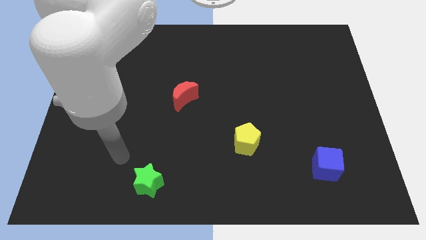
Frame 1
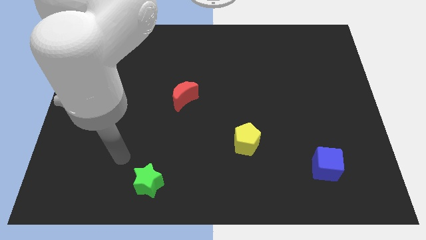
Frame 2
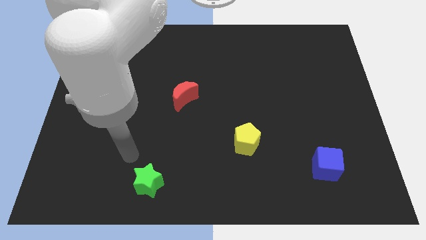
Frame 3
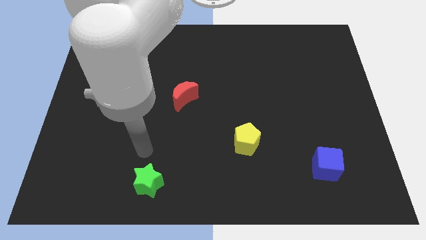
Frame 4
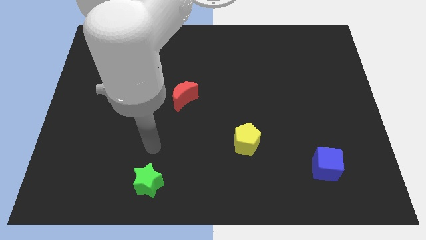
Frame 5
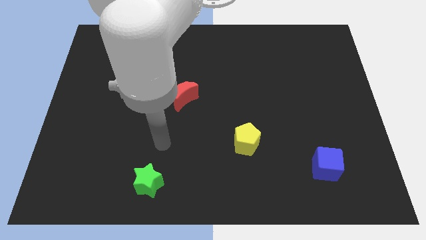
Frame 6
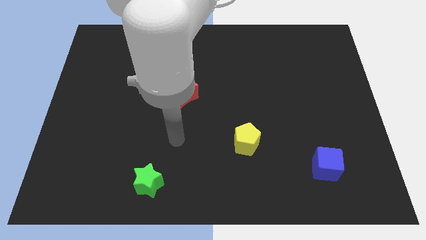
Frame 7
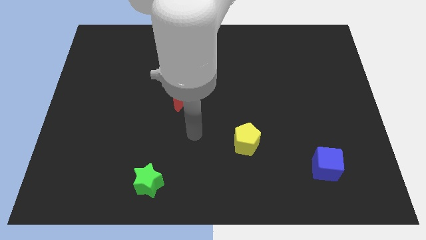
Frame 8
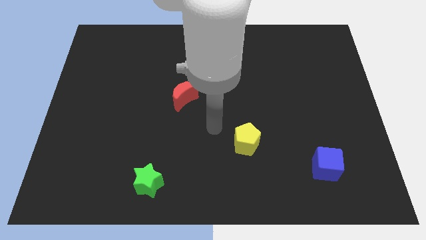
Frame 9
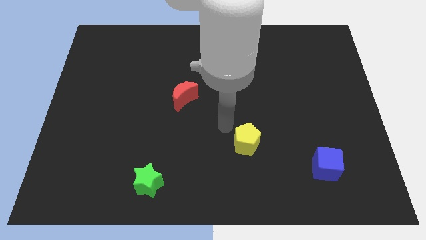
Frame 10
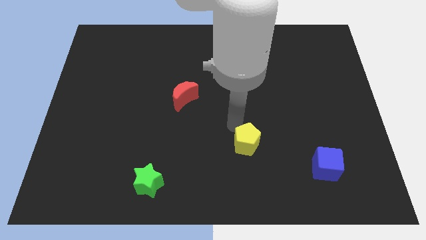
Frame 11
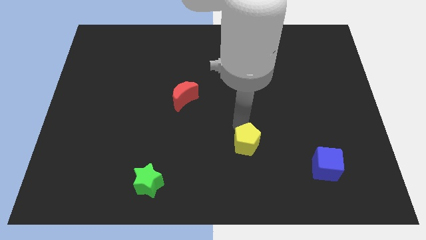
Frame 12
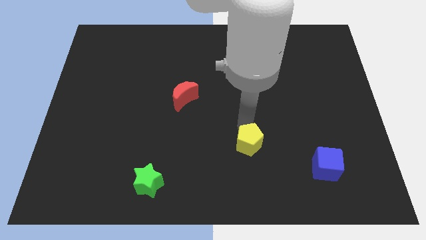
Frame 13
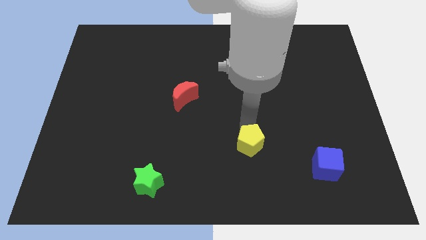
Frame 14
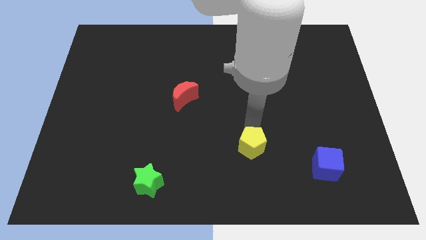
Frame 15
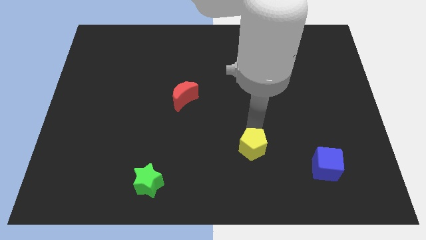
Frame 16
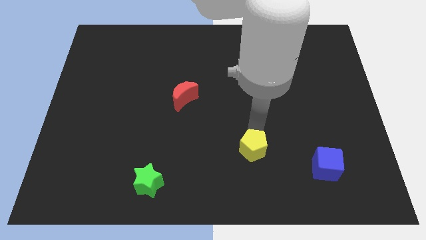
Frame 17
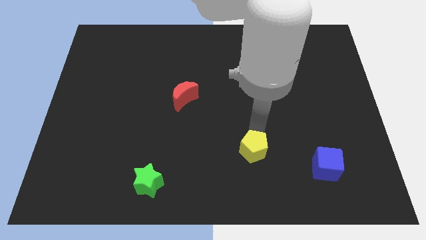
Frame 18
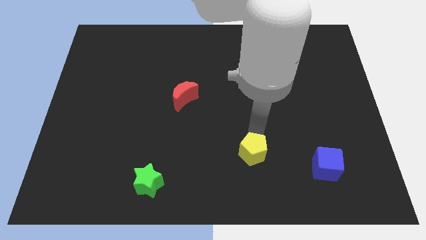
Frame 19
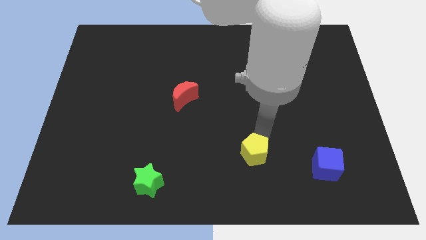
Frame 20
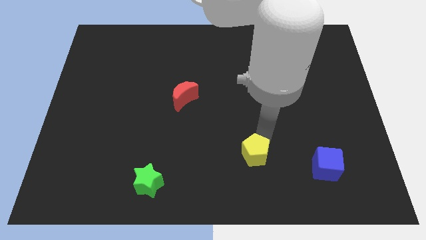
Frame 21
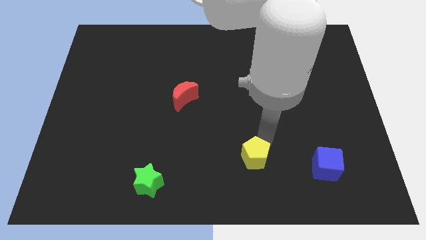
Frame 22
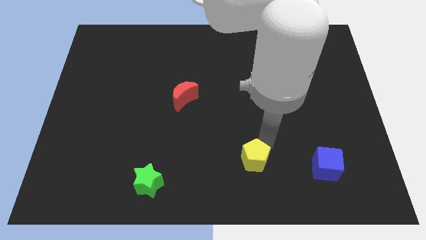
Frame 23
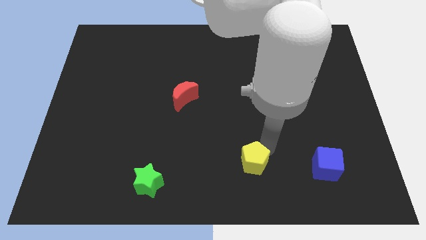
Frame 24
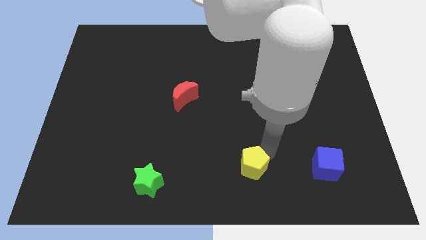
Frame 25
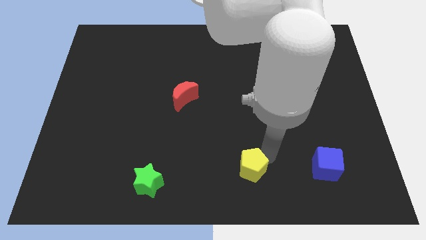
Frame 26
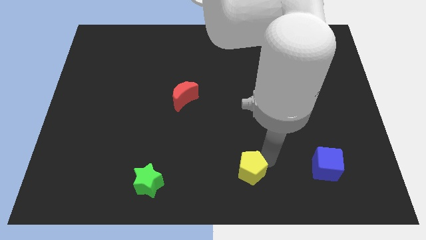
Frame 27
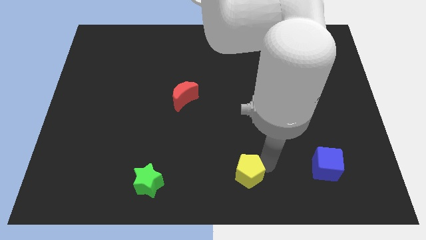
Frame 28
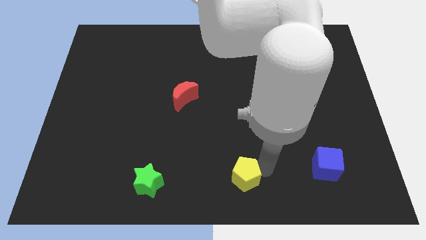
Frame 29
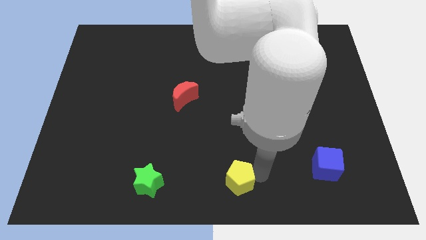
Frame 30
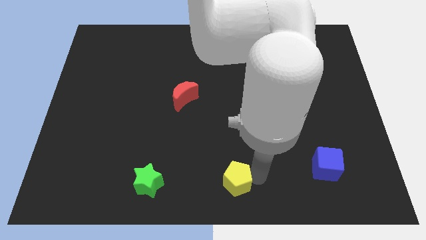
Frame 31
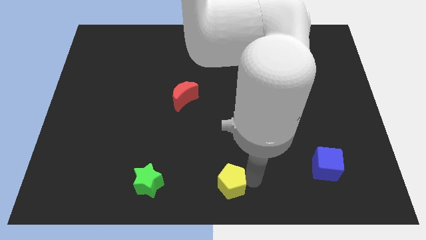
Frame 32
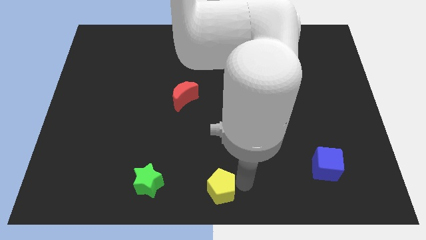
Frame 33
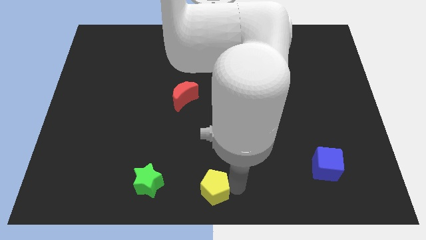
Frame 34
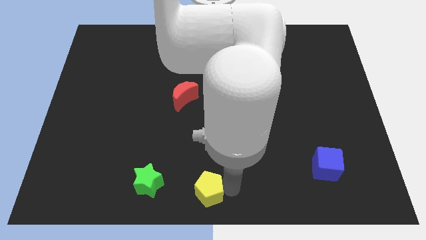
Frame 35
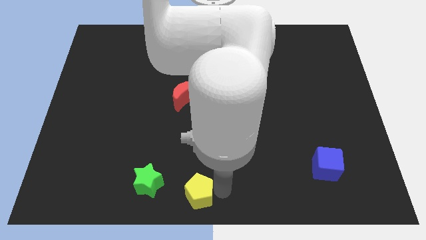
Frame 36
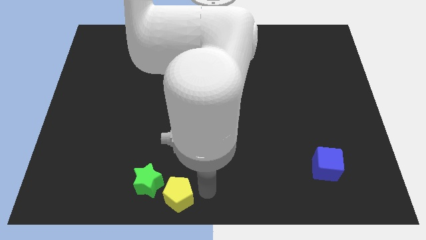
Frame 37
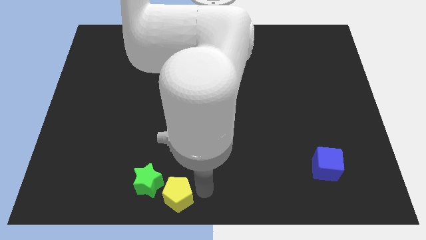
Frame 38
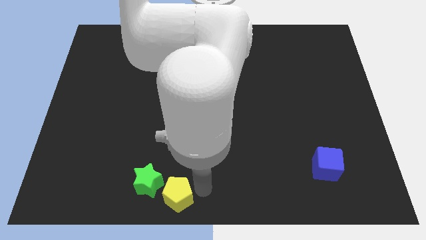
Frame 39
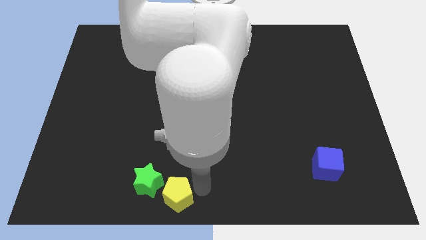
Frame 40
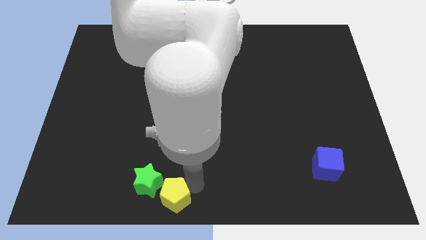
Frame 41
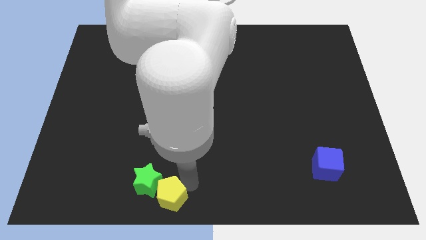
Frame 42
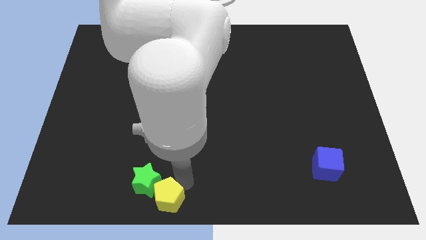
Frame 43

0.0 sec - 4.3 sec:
put the yellow pentagon towards the star

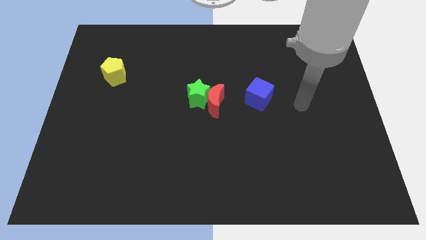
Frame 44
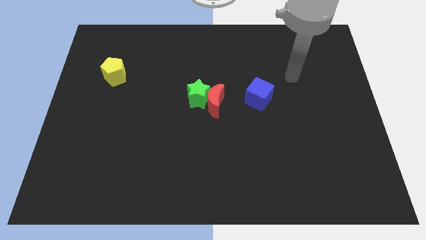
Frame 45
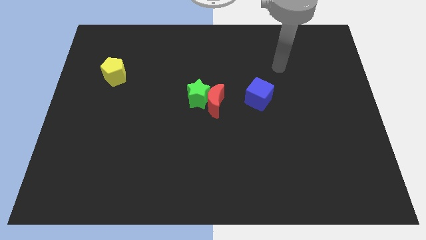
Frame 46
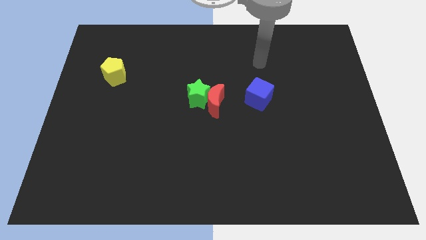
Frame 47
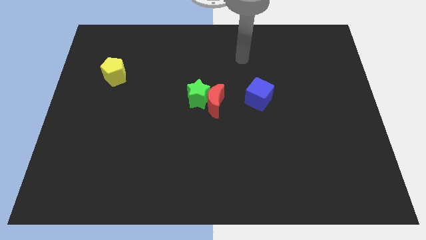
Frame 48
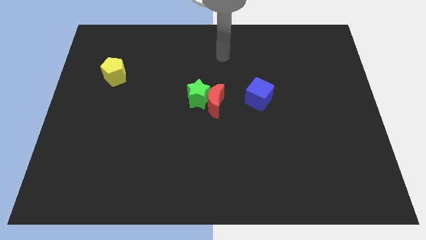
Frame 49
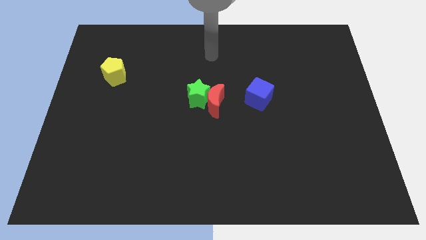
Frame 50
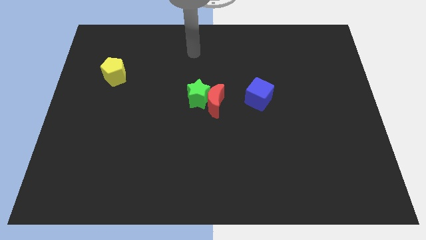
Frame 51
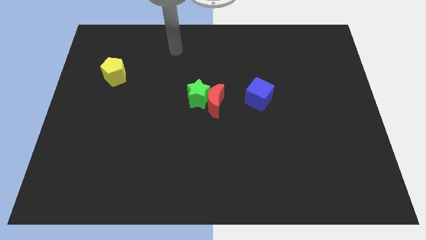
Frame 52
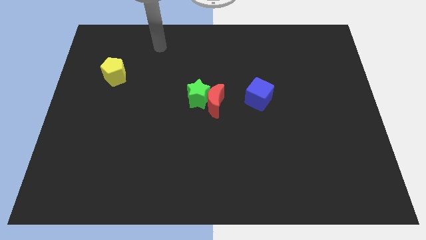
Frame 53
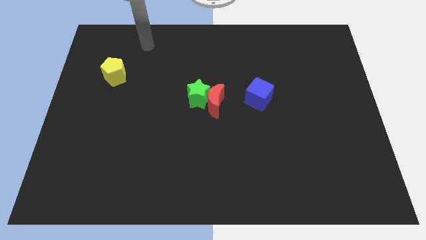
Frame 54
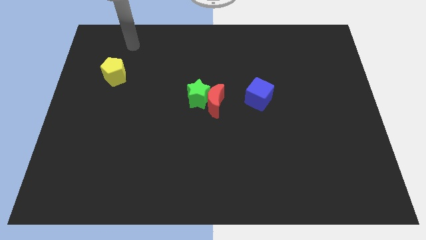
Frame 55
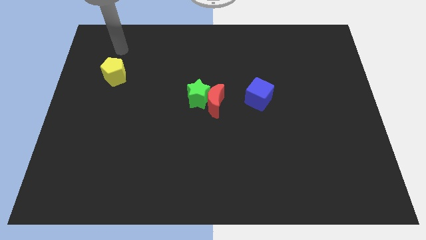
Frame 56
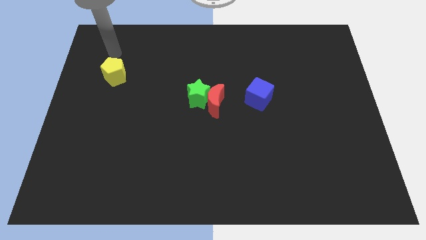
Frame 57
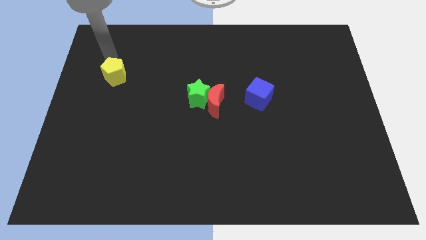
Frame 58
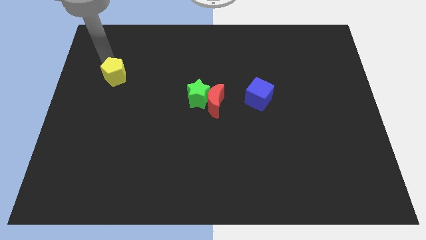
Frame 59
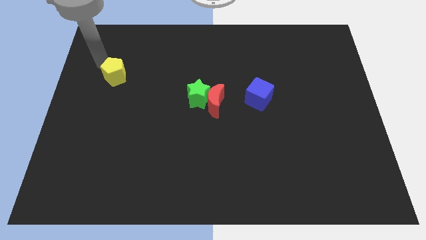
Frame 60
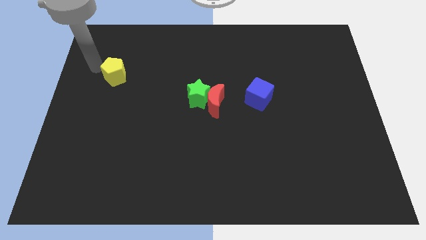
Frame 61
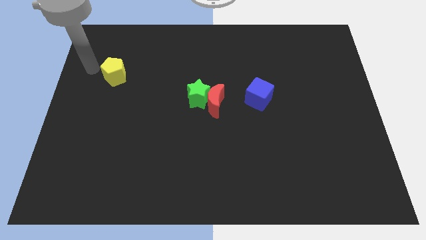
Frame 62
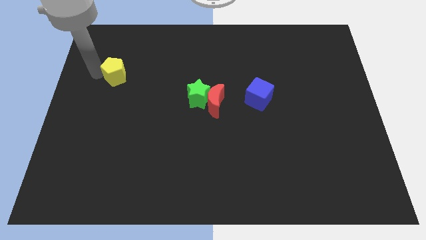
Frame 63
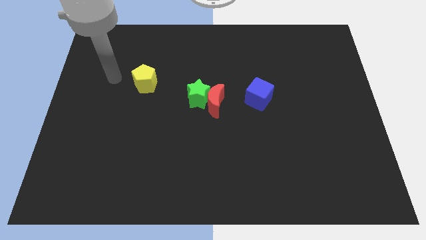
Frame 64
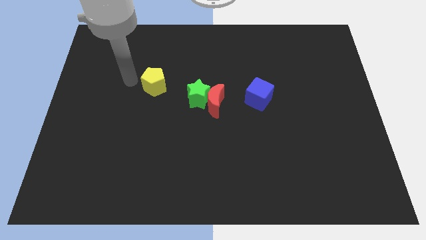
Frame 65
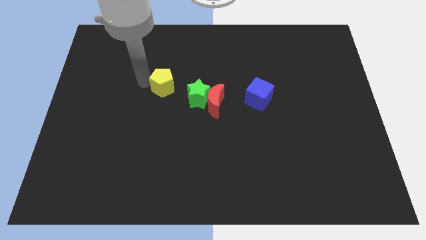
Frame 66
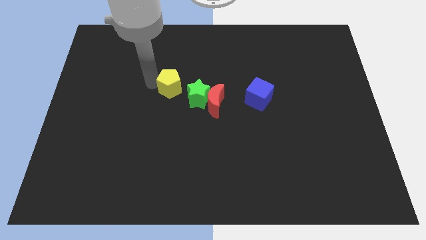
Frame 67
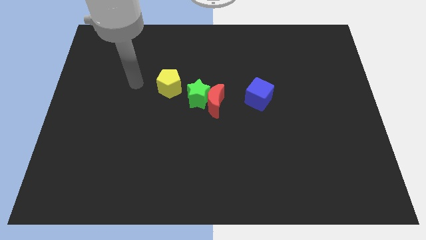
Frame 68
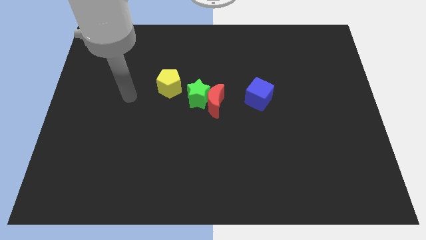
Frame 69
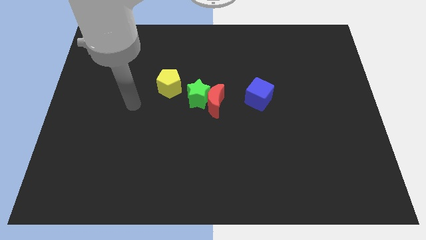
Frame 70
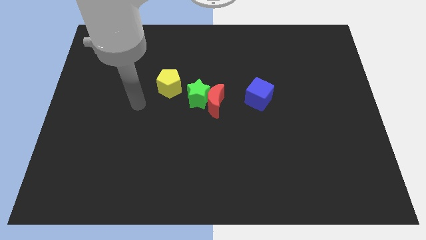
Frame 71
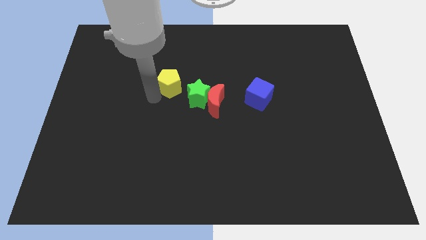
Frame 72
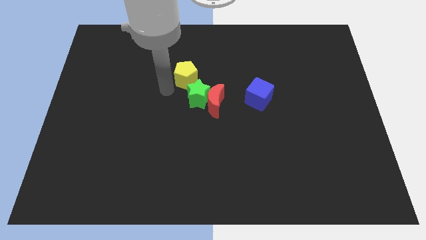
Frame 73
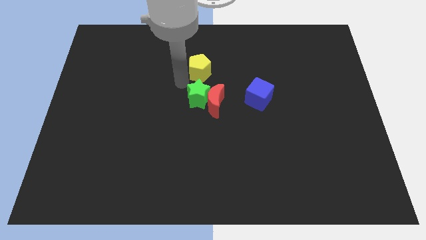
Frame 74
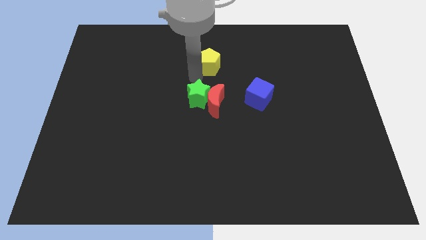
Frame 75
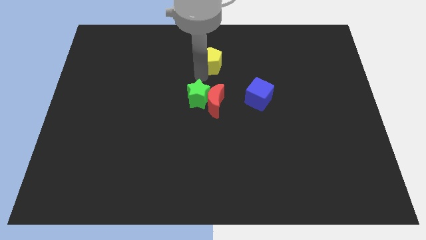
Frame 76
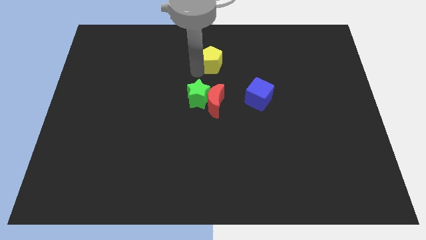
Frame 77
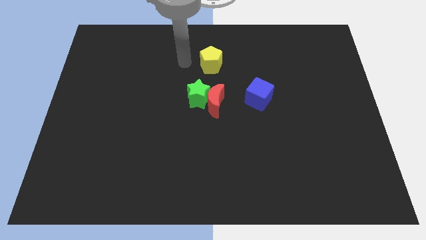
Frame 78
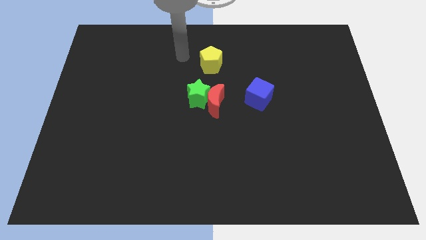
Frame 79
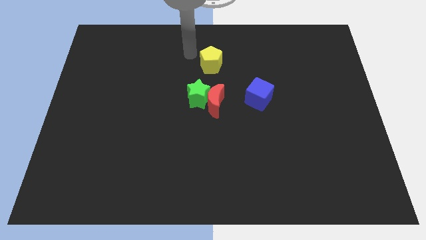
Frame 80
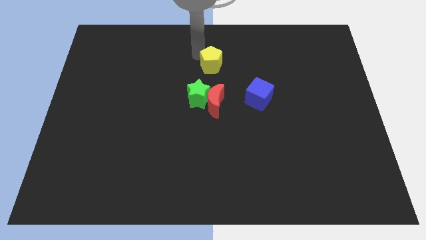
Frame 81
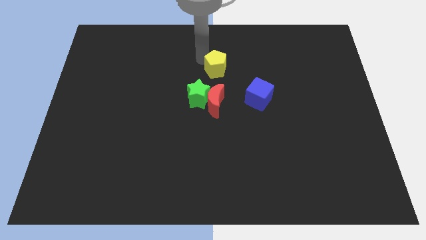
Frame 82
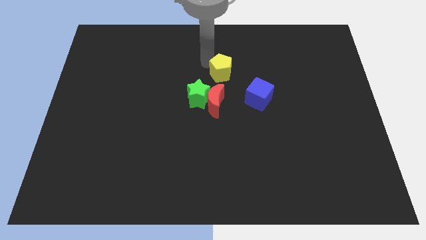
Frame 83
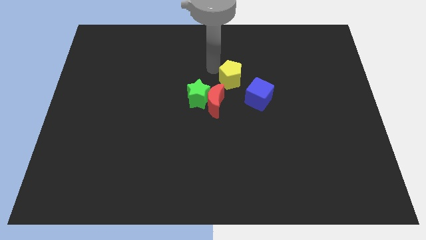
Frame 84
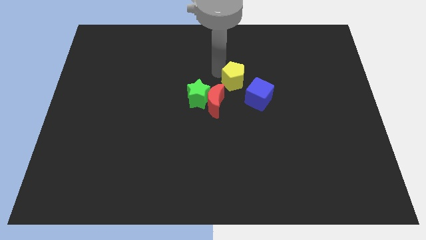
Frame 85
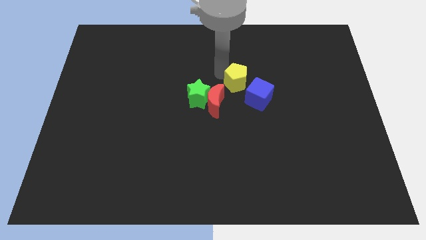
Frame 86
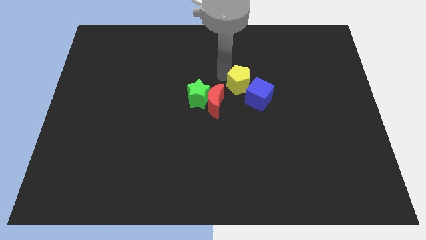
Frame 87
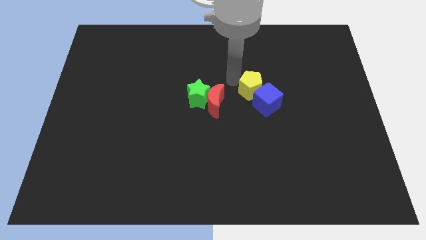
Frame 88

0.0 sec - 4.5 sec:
put the pentagon to the blue cube
